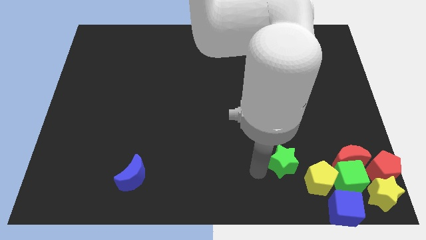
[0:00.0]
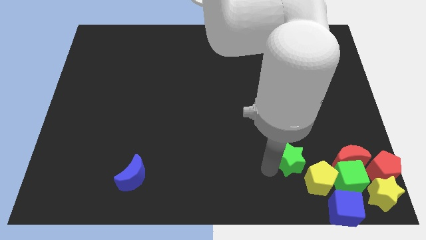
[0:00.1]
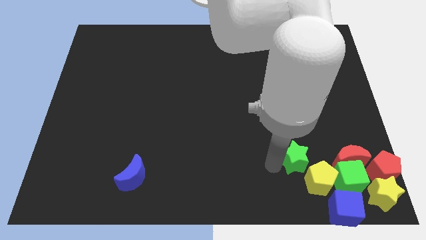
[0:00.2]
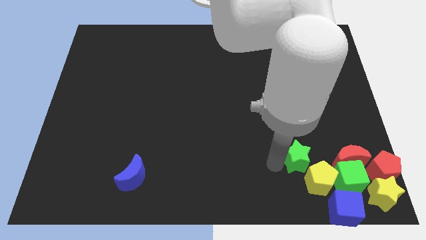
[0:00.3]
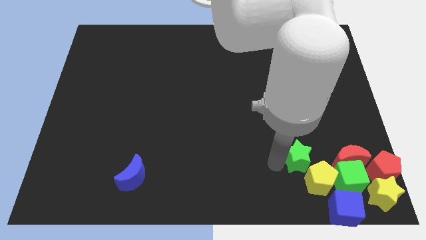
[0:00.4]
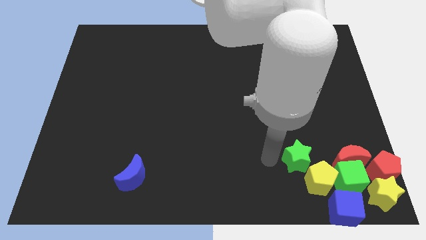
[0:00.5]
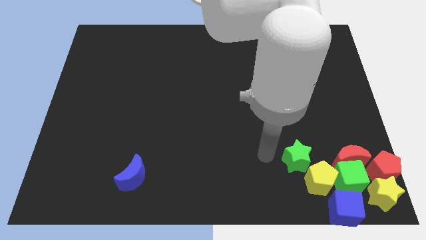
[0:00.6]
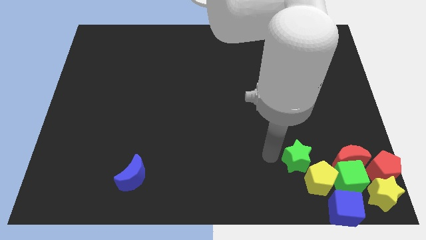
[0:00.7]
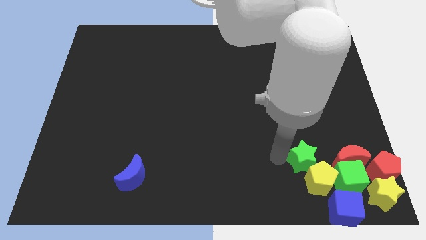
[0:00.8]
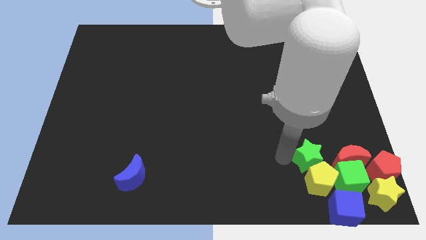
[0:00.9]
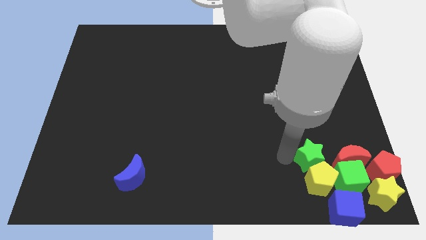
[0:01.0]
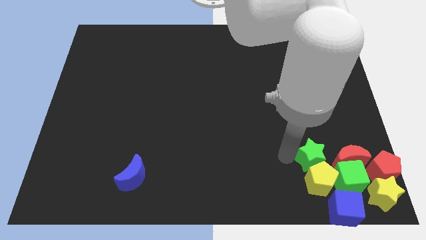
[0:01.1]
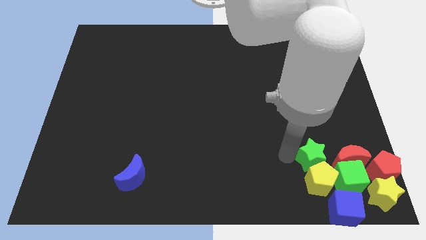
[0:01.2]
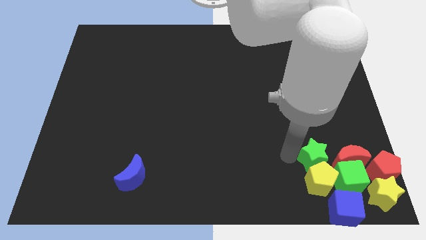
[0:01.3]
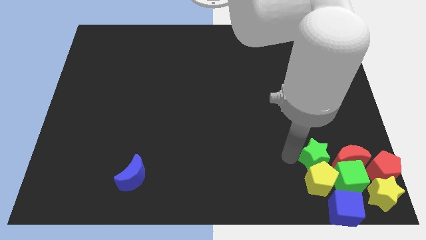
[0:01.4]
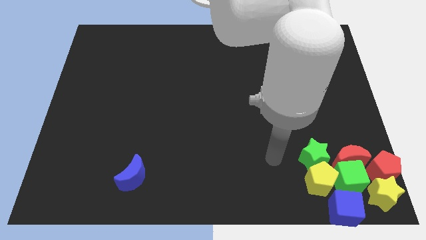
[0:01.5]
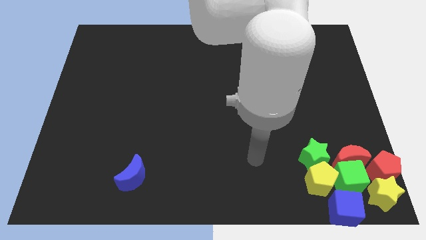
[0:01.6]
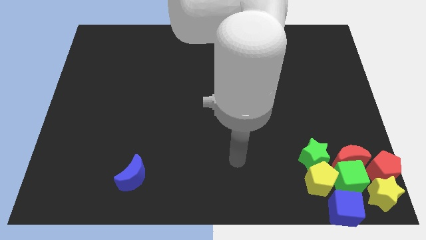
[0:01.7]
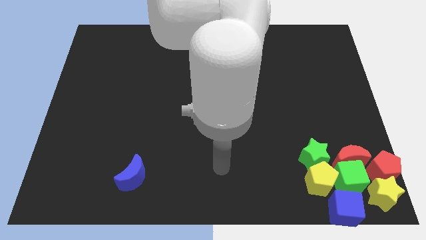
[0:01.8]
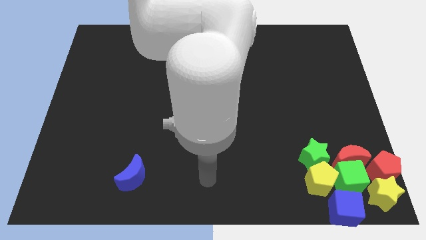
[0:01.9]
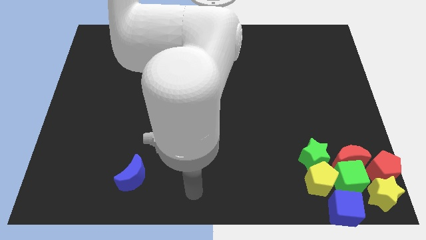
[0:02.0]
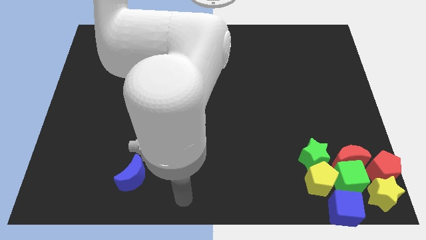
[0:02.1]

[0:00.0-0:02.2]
place the green star above the yellow pentagon

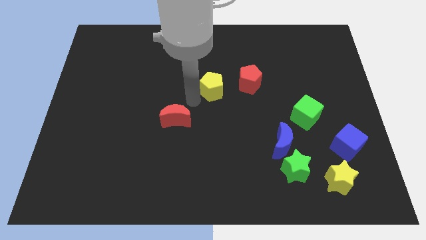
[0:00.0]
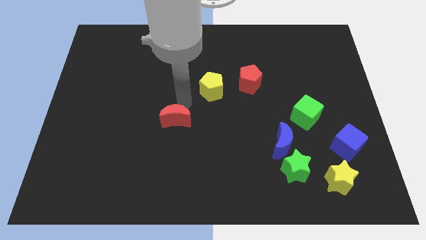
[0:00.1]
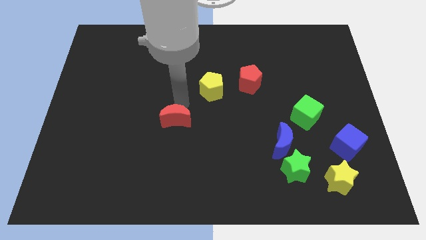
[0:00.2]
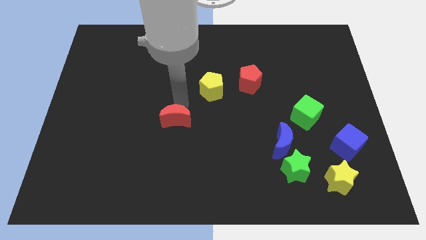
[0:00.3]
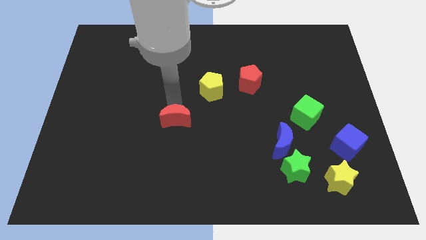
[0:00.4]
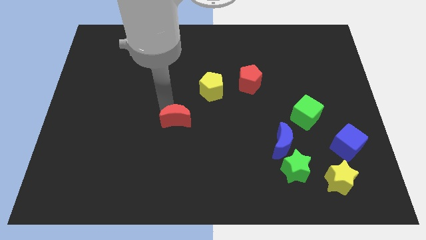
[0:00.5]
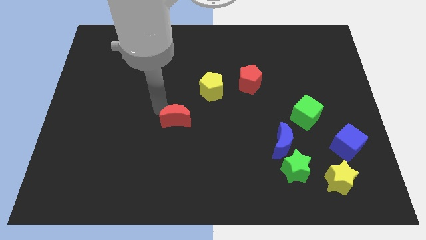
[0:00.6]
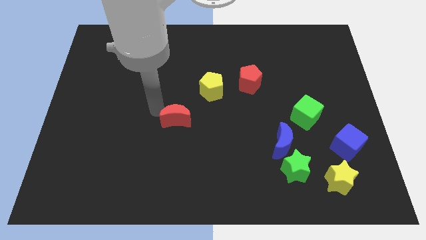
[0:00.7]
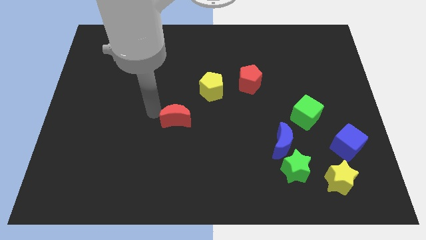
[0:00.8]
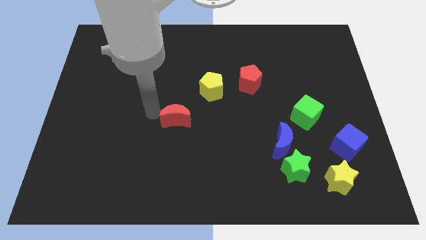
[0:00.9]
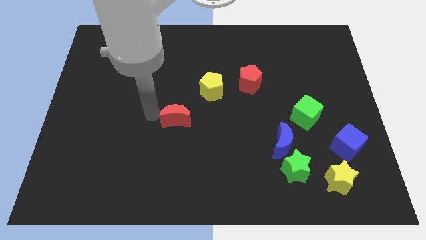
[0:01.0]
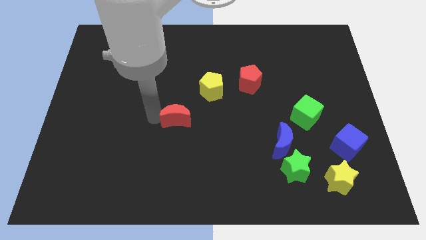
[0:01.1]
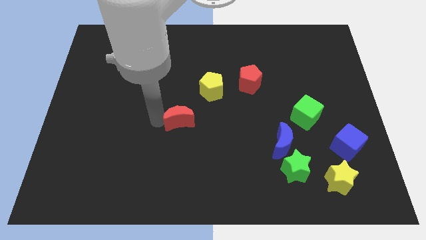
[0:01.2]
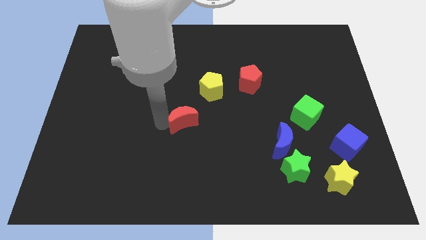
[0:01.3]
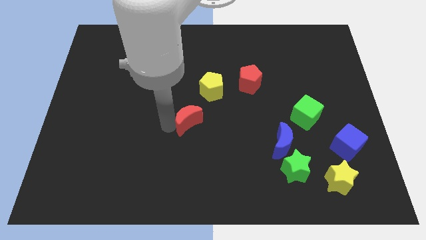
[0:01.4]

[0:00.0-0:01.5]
push the red crescent slightly towards the centre of the board

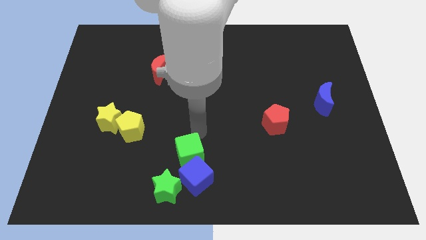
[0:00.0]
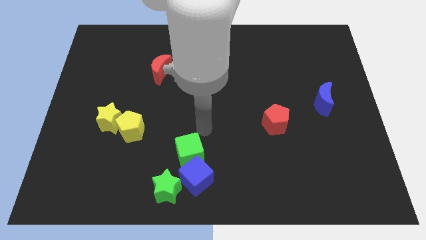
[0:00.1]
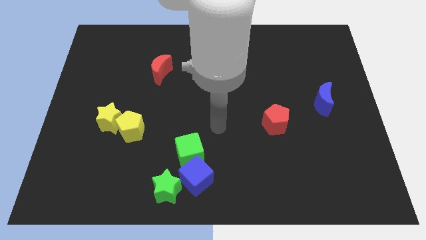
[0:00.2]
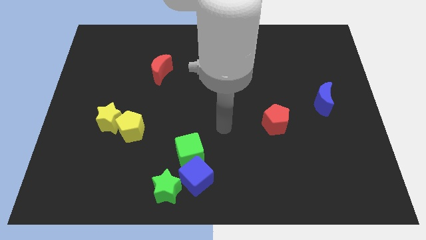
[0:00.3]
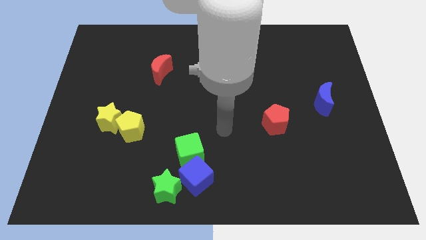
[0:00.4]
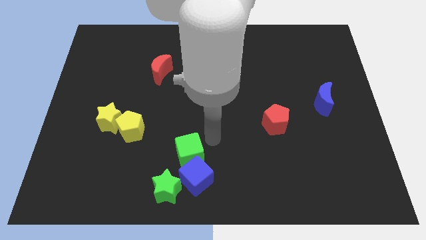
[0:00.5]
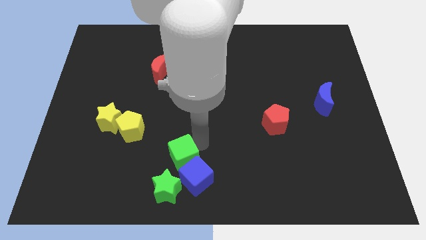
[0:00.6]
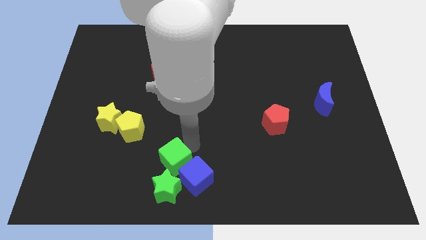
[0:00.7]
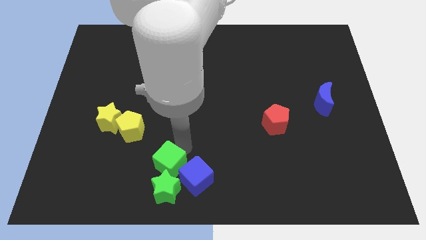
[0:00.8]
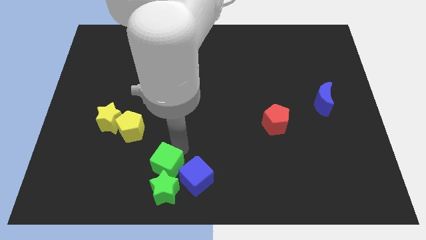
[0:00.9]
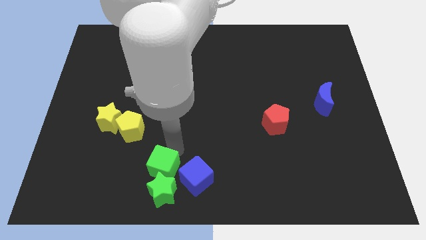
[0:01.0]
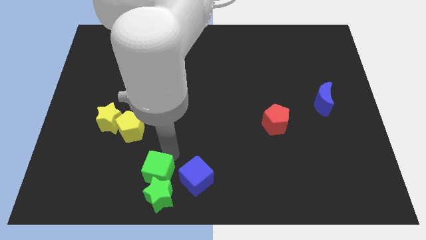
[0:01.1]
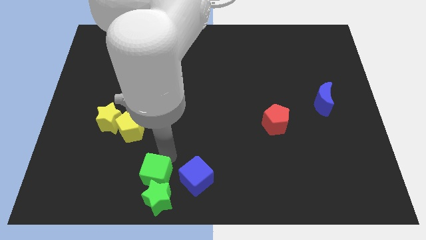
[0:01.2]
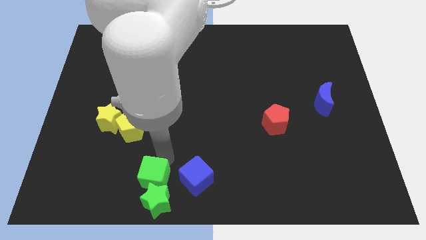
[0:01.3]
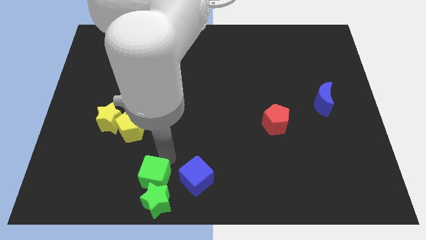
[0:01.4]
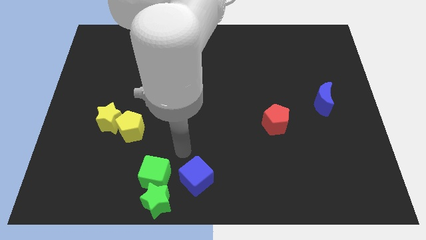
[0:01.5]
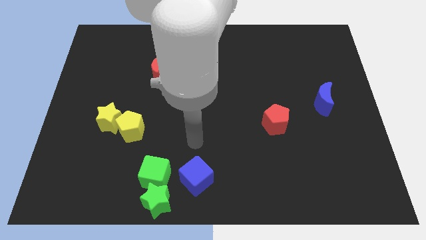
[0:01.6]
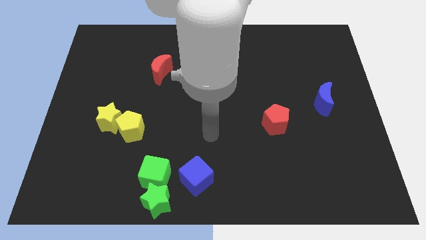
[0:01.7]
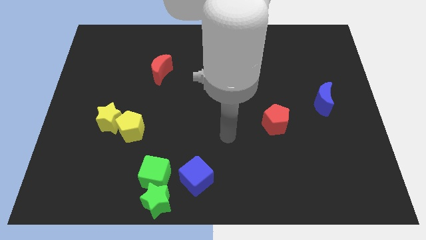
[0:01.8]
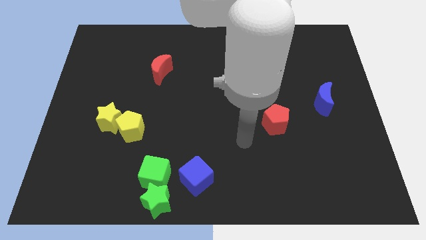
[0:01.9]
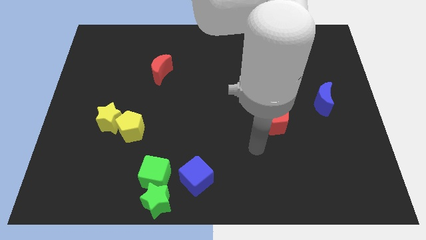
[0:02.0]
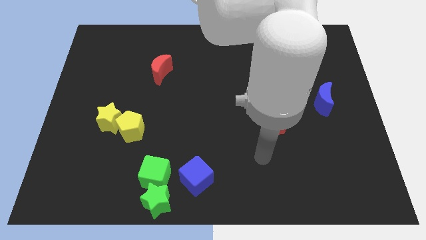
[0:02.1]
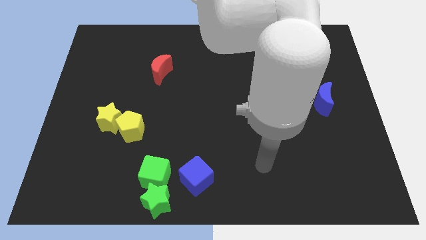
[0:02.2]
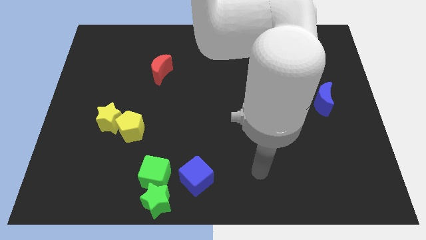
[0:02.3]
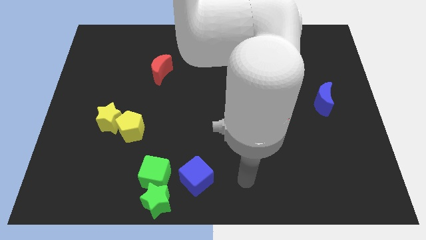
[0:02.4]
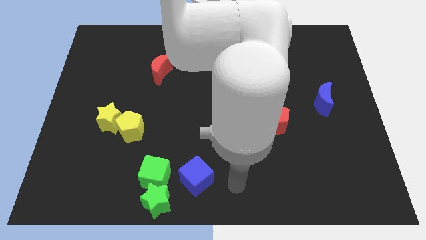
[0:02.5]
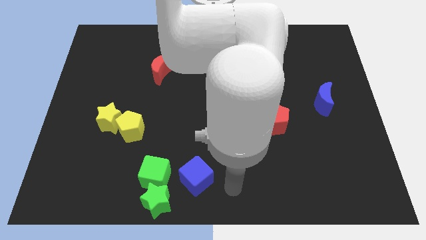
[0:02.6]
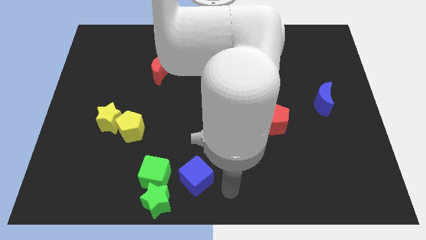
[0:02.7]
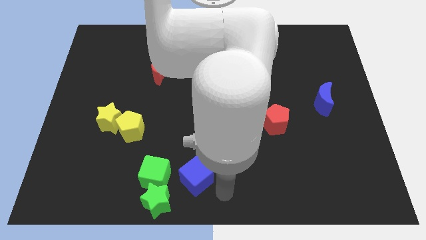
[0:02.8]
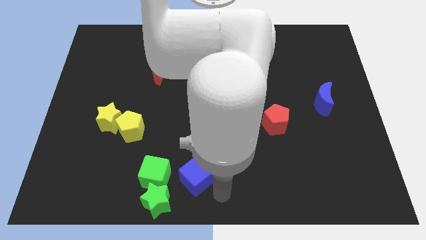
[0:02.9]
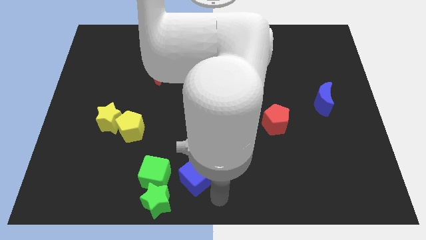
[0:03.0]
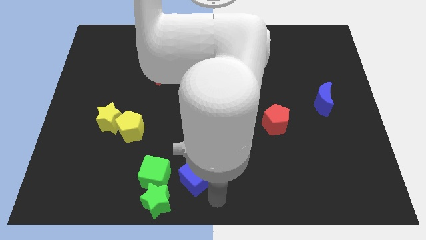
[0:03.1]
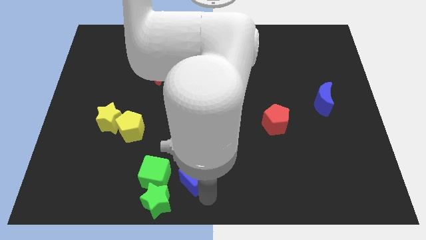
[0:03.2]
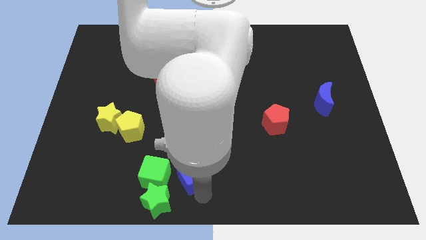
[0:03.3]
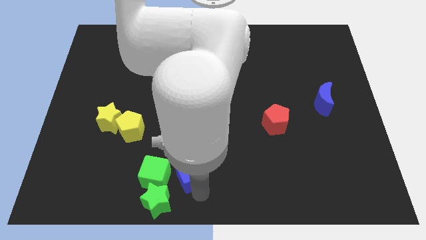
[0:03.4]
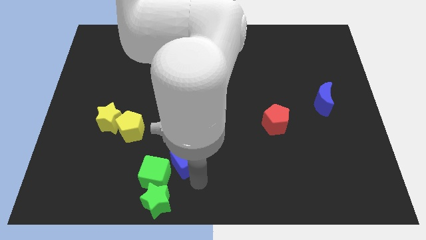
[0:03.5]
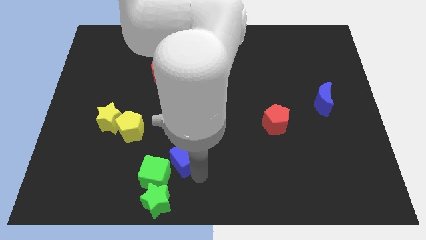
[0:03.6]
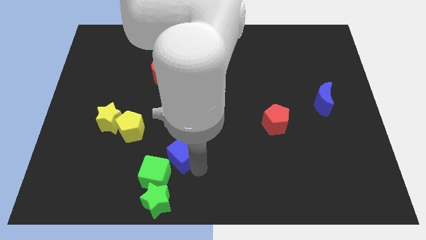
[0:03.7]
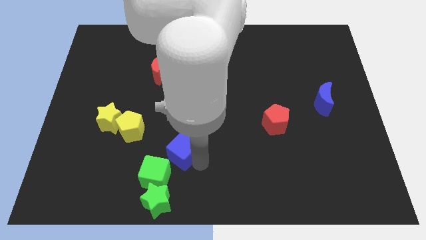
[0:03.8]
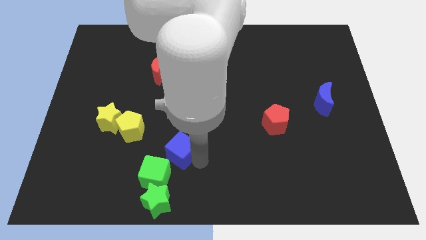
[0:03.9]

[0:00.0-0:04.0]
move the blue cube to the top right of the green cube

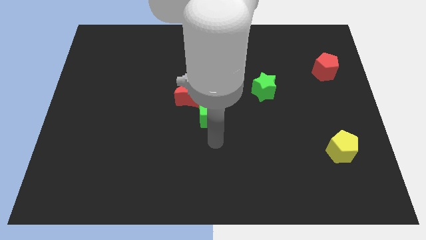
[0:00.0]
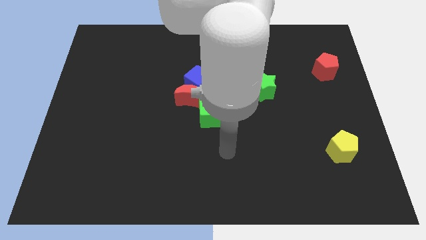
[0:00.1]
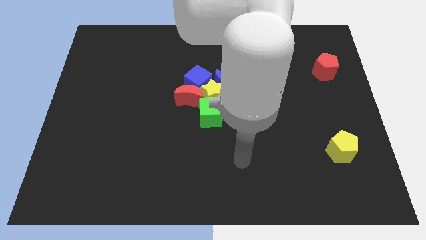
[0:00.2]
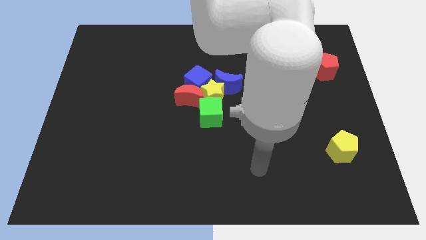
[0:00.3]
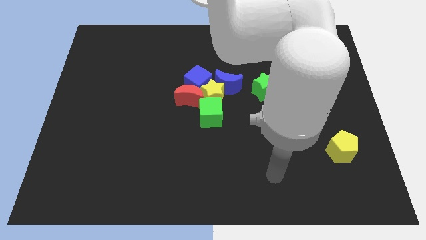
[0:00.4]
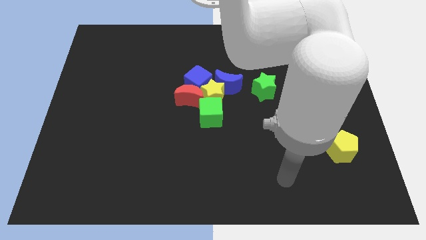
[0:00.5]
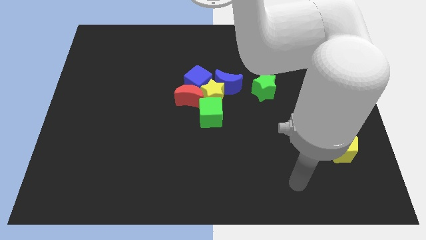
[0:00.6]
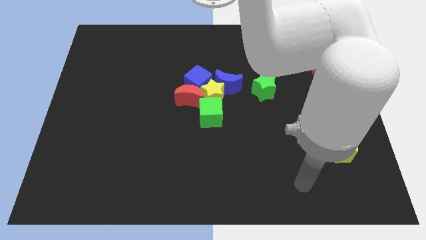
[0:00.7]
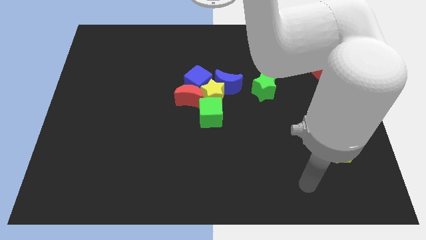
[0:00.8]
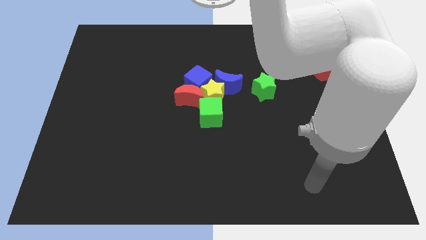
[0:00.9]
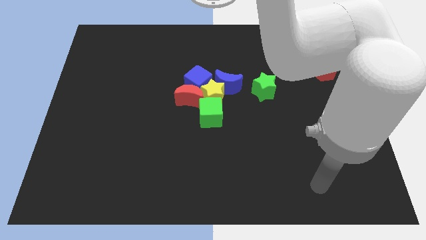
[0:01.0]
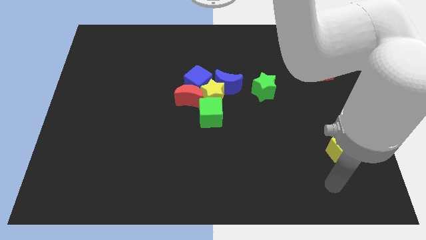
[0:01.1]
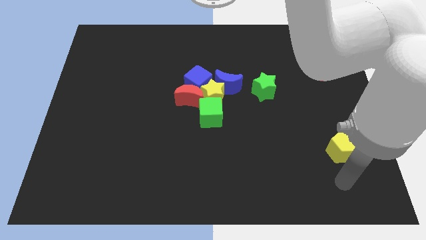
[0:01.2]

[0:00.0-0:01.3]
push your arm below the yellow pentagon
